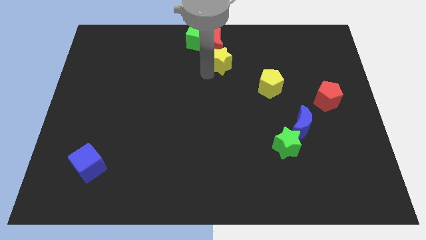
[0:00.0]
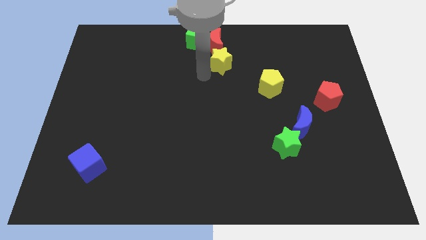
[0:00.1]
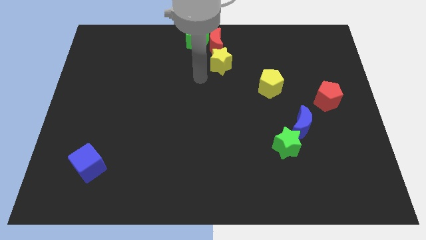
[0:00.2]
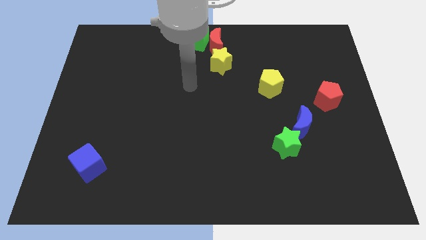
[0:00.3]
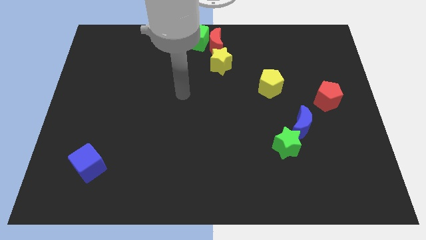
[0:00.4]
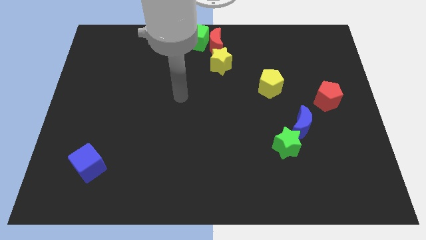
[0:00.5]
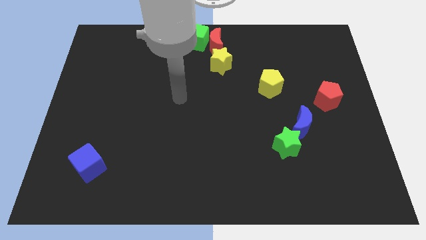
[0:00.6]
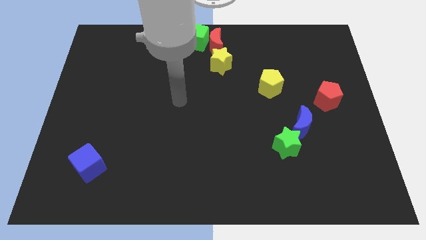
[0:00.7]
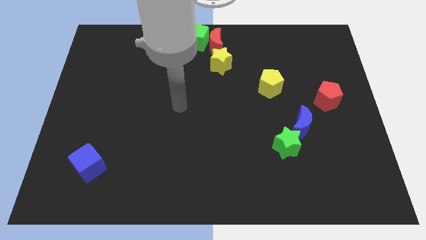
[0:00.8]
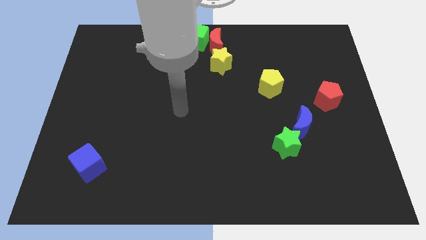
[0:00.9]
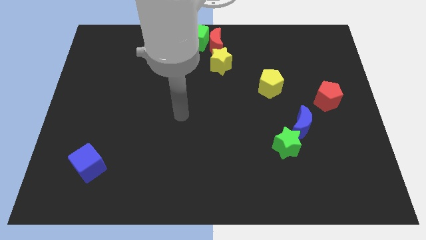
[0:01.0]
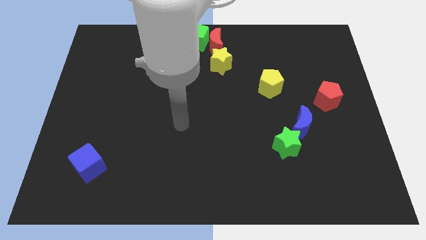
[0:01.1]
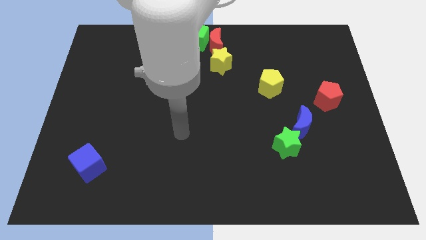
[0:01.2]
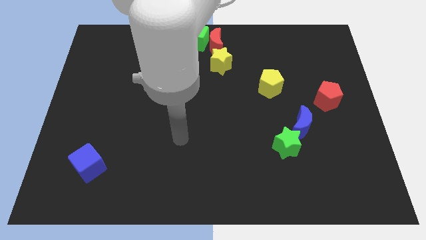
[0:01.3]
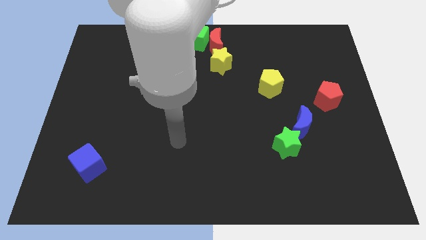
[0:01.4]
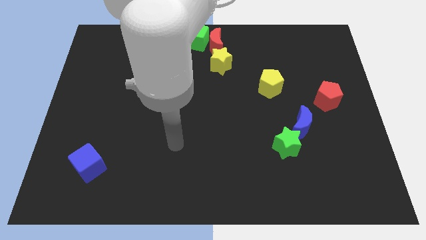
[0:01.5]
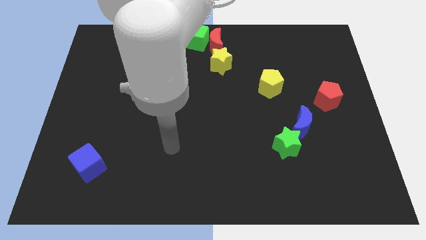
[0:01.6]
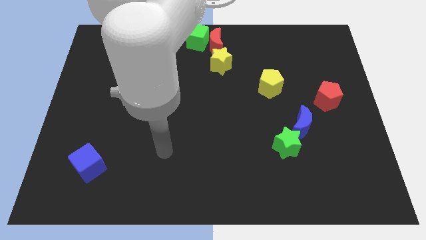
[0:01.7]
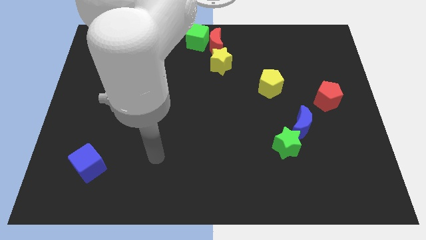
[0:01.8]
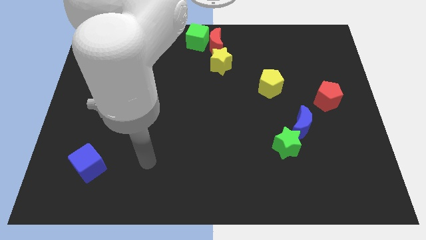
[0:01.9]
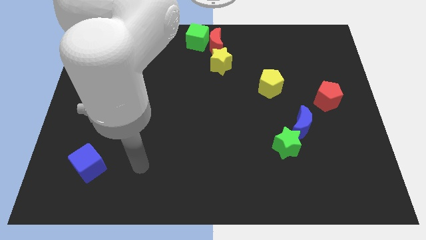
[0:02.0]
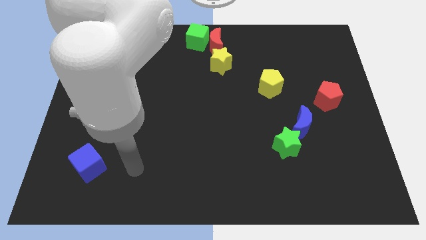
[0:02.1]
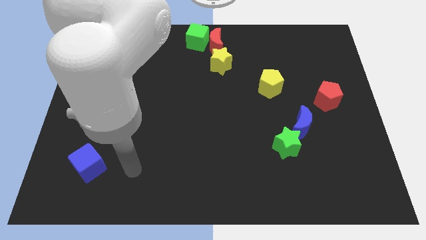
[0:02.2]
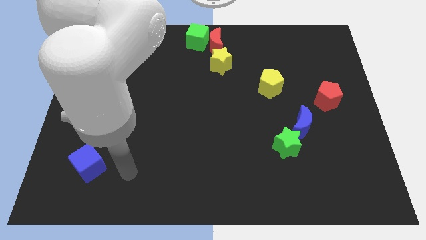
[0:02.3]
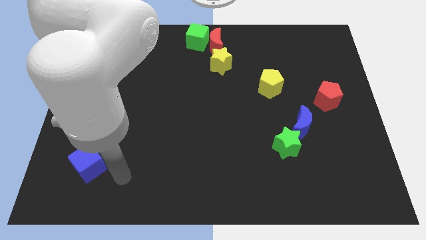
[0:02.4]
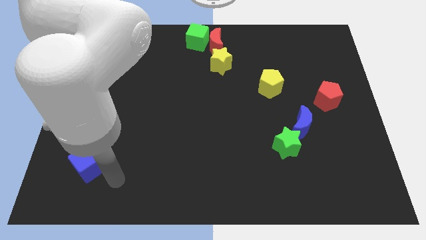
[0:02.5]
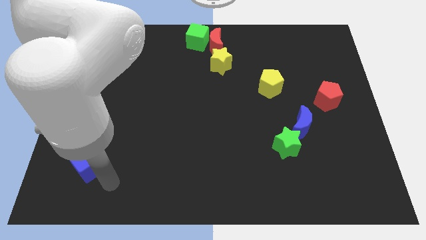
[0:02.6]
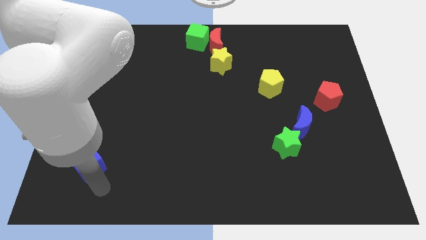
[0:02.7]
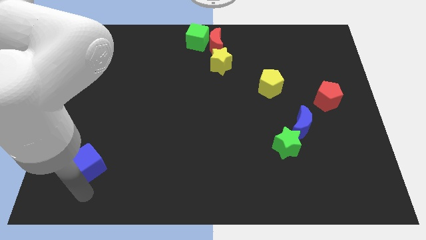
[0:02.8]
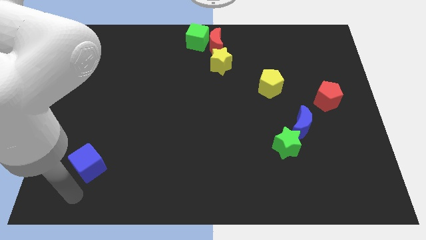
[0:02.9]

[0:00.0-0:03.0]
move your arm towards the bottom left corner of the board

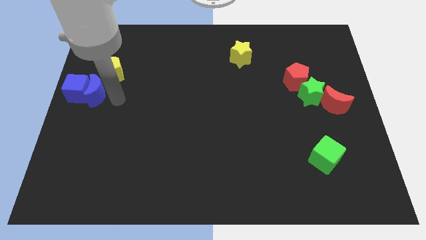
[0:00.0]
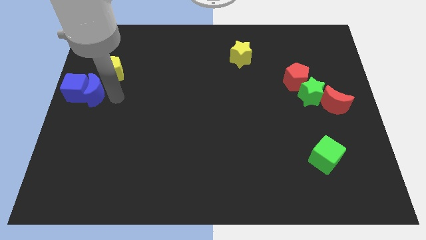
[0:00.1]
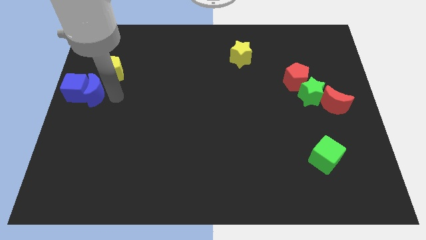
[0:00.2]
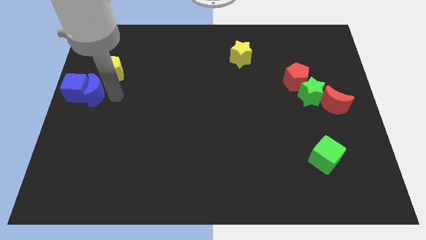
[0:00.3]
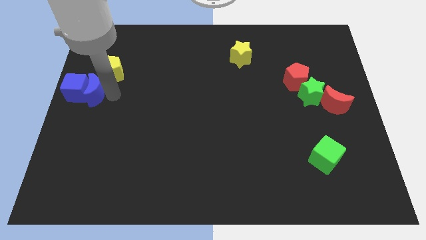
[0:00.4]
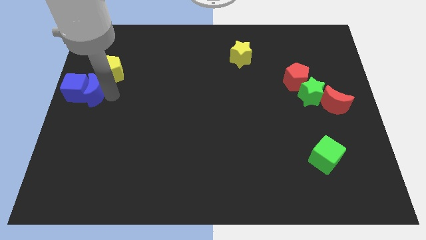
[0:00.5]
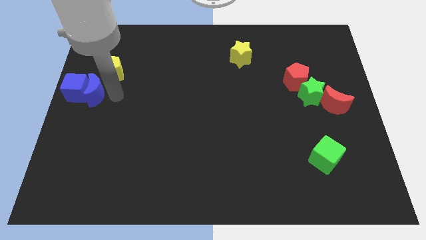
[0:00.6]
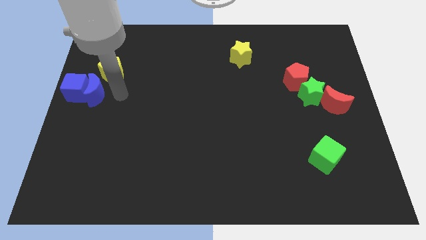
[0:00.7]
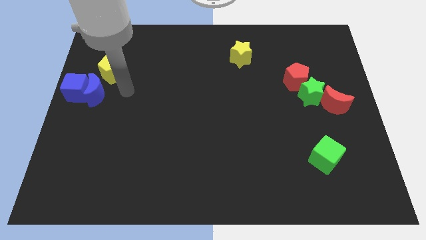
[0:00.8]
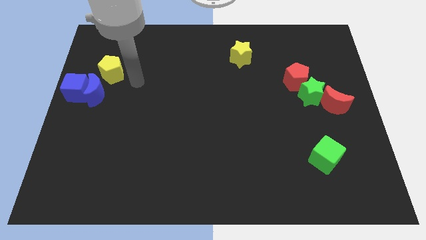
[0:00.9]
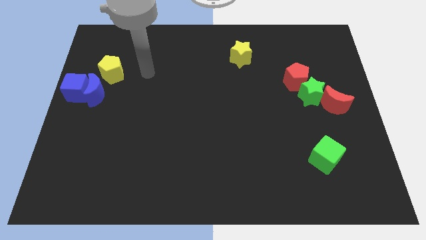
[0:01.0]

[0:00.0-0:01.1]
move your arm away from blue moon

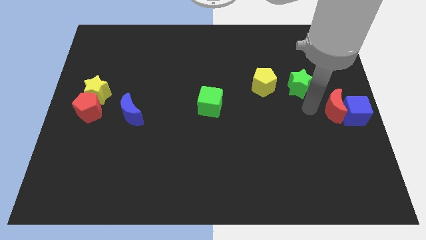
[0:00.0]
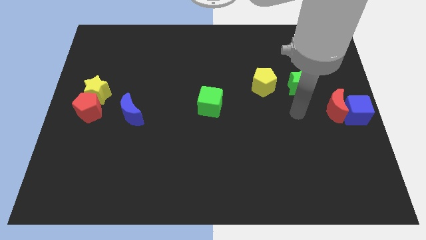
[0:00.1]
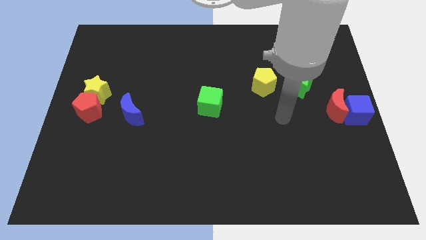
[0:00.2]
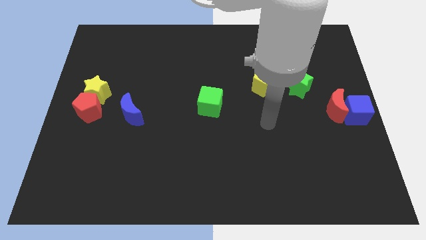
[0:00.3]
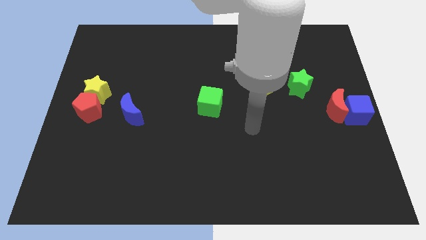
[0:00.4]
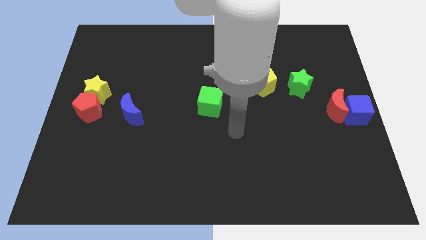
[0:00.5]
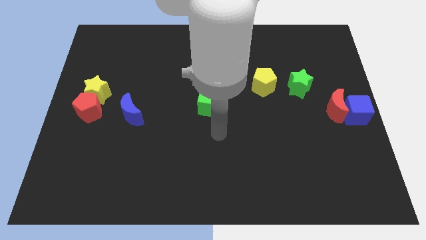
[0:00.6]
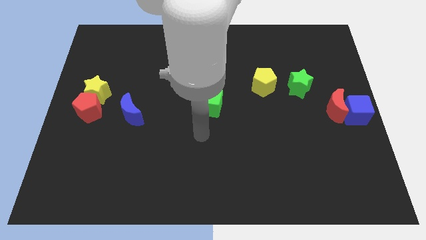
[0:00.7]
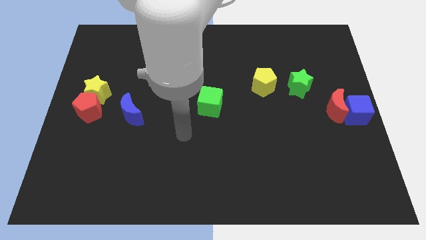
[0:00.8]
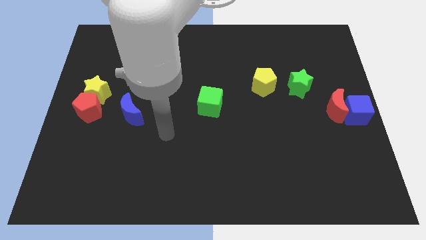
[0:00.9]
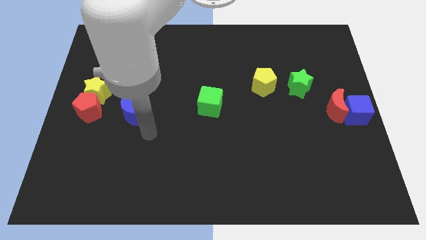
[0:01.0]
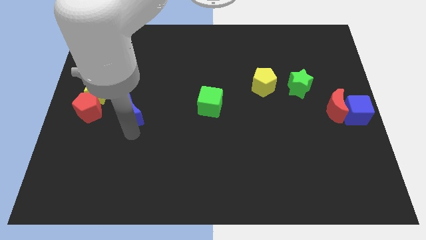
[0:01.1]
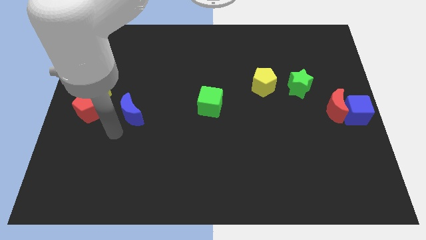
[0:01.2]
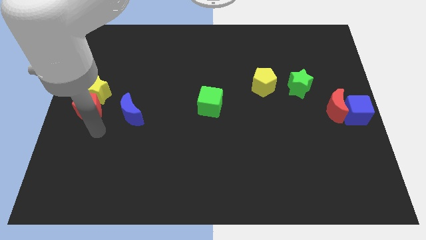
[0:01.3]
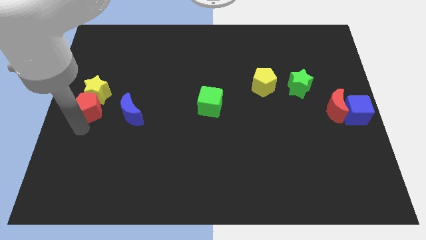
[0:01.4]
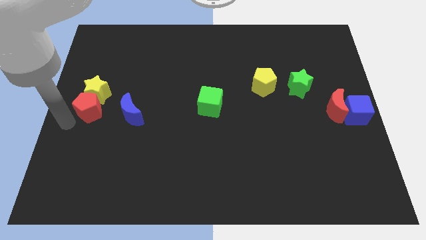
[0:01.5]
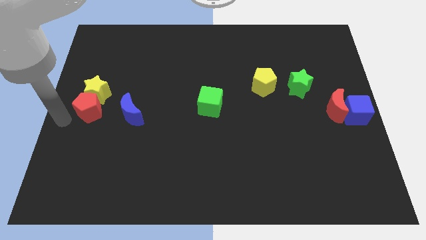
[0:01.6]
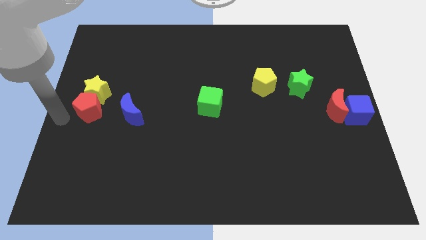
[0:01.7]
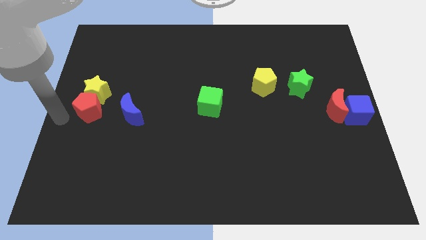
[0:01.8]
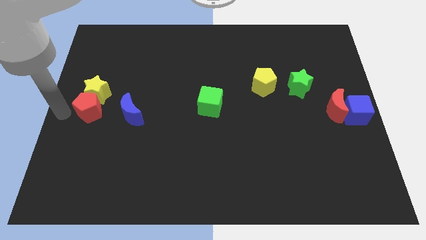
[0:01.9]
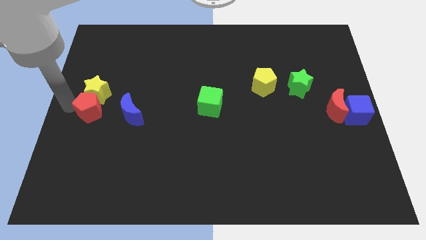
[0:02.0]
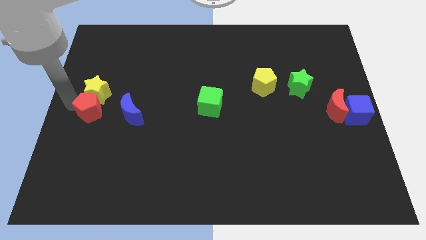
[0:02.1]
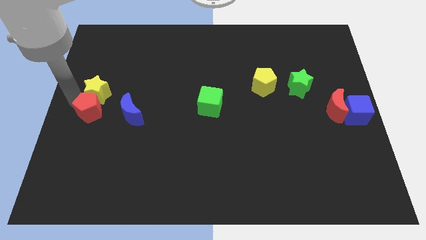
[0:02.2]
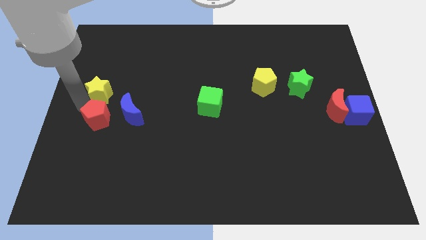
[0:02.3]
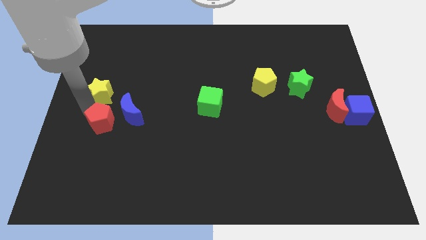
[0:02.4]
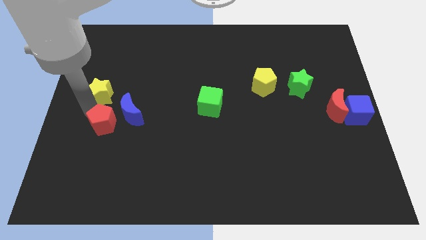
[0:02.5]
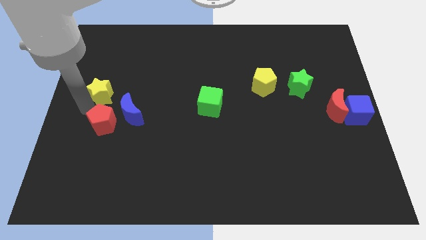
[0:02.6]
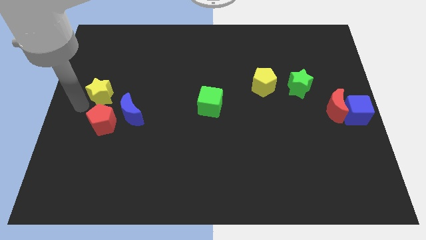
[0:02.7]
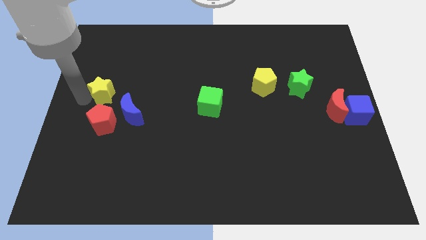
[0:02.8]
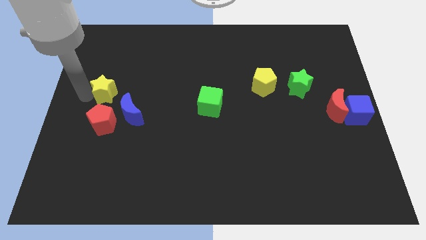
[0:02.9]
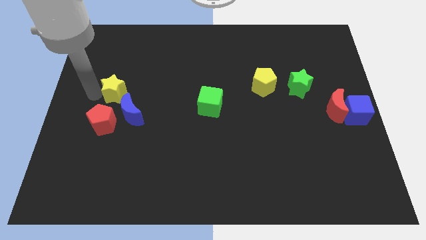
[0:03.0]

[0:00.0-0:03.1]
go away from the red moon

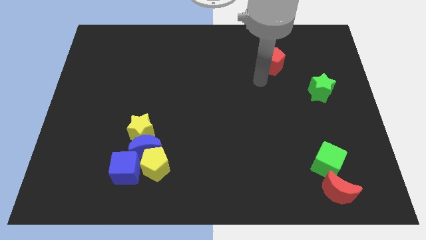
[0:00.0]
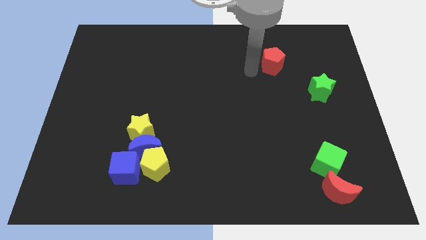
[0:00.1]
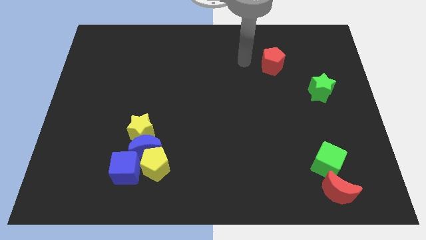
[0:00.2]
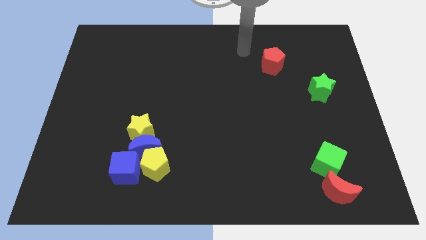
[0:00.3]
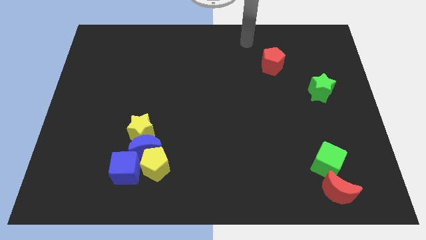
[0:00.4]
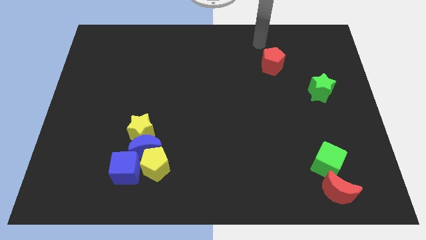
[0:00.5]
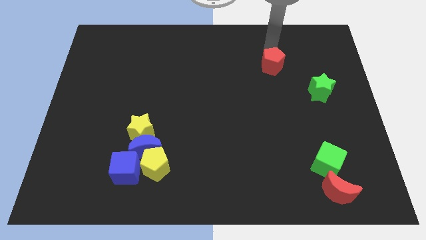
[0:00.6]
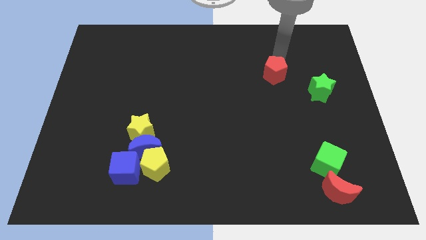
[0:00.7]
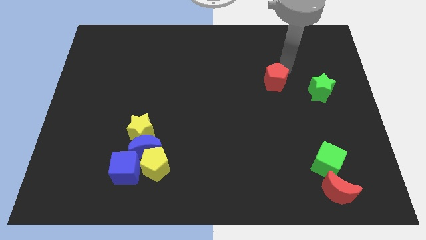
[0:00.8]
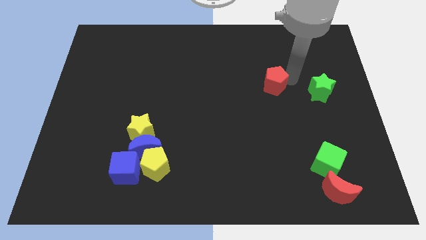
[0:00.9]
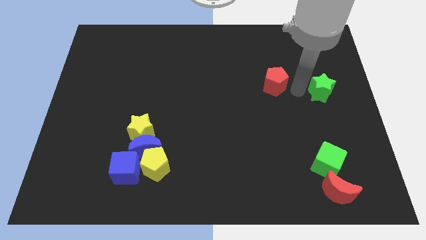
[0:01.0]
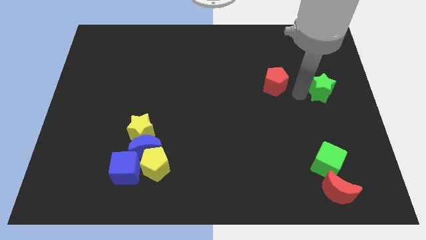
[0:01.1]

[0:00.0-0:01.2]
slide red pentagon to the top left of green star

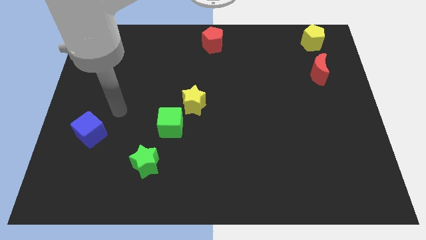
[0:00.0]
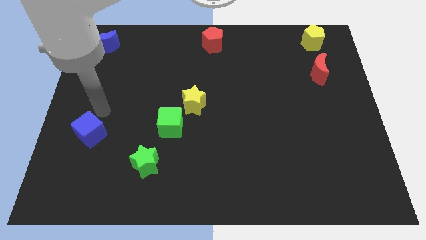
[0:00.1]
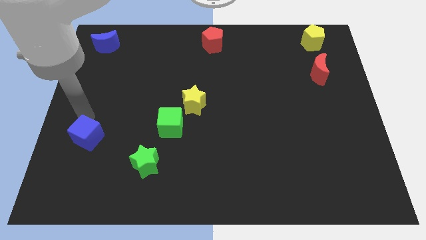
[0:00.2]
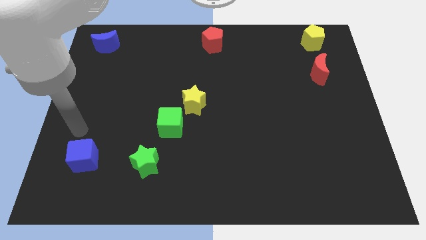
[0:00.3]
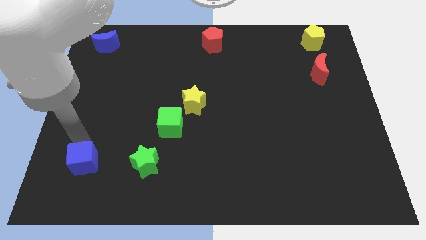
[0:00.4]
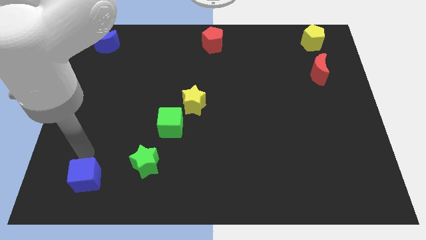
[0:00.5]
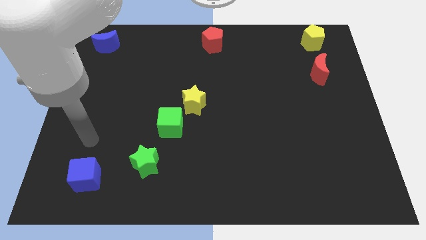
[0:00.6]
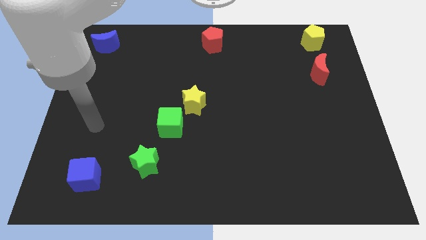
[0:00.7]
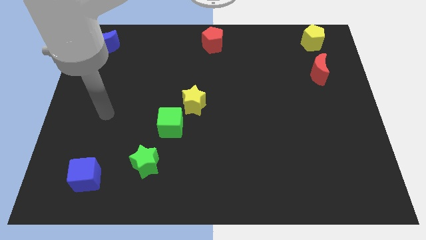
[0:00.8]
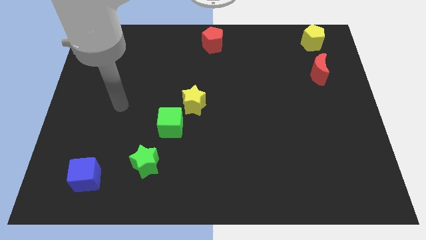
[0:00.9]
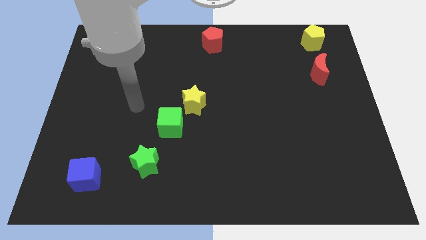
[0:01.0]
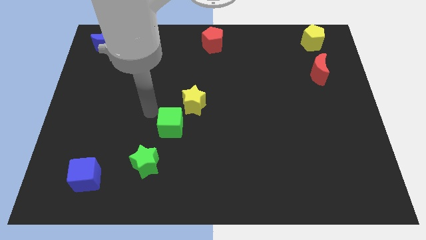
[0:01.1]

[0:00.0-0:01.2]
push the blue cube to the bottom of the board
